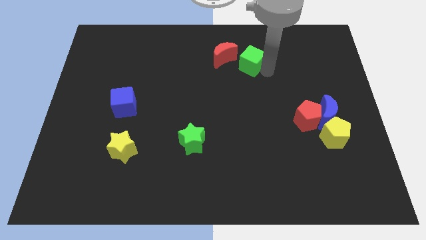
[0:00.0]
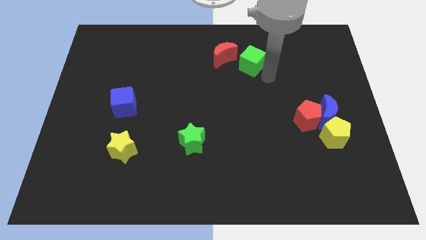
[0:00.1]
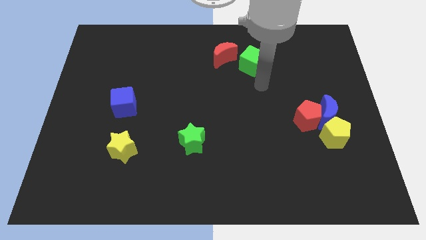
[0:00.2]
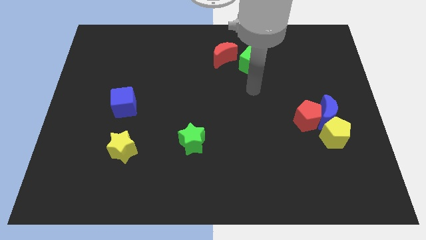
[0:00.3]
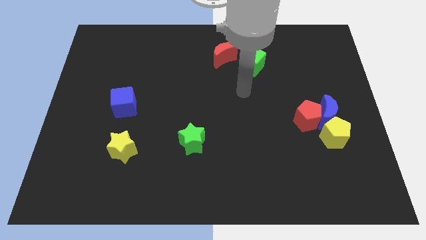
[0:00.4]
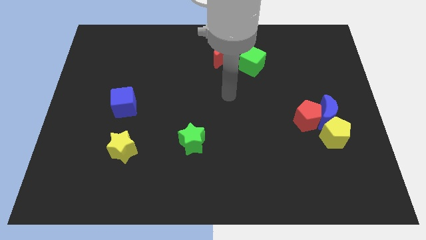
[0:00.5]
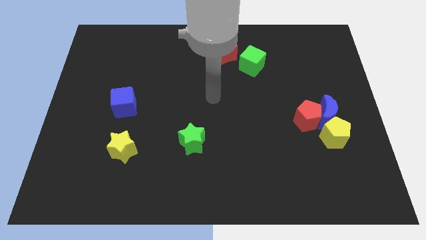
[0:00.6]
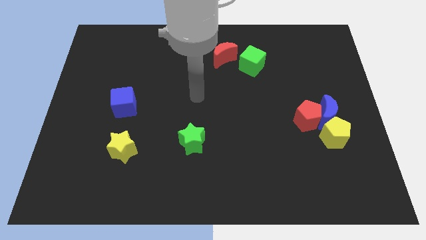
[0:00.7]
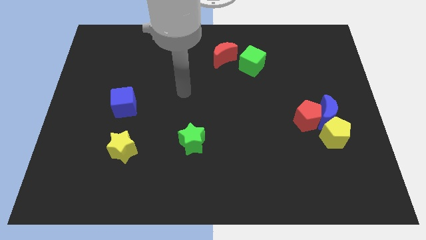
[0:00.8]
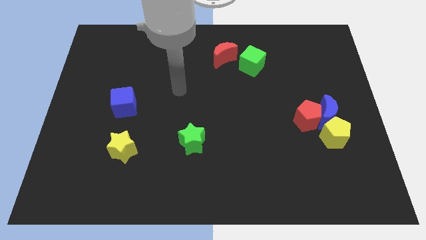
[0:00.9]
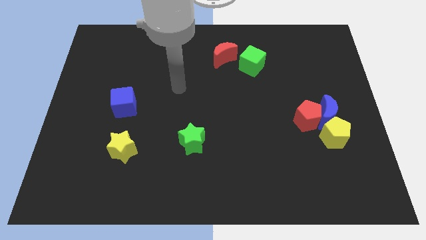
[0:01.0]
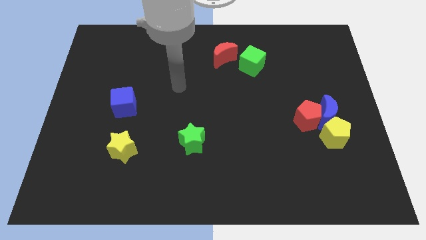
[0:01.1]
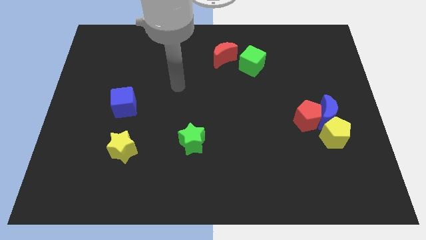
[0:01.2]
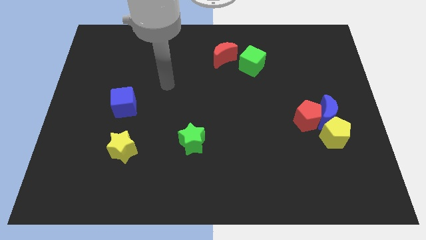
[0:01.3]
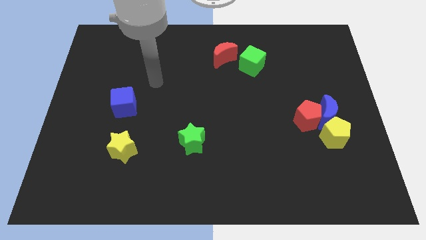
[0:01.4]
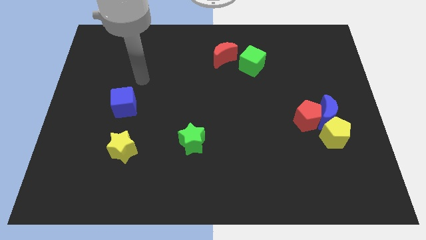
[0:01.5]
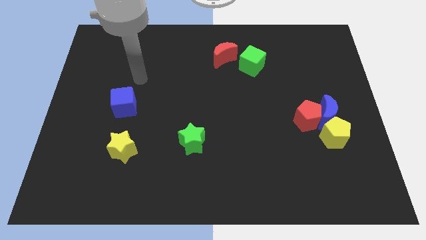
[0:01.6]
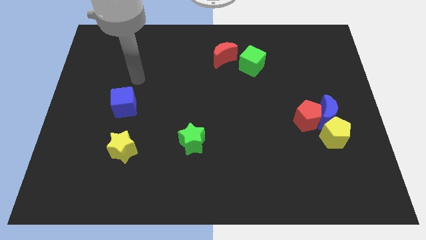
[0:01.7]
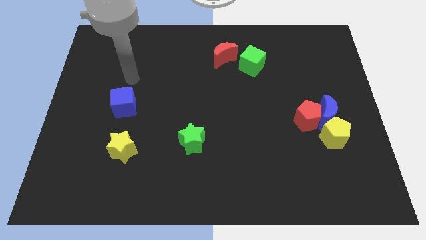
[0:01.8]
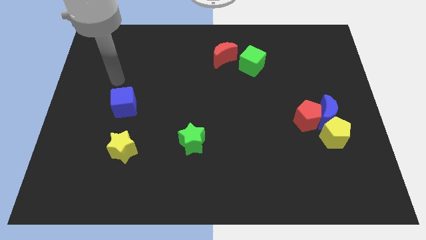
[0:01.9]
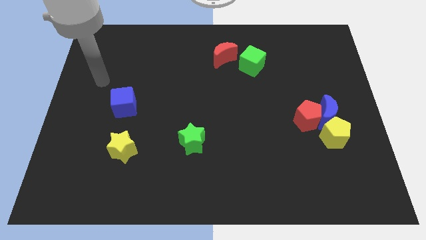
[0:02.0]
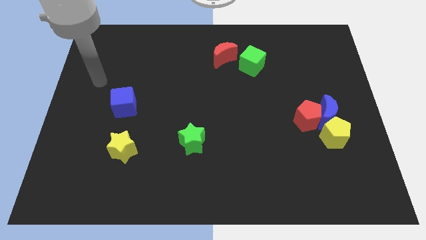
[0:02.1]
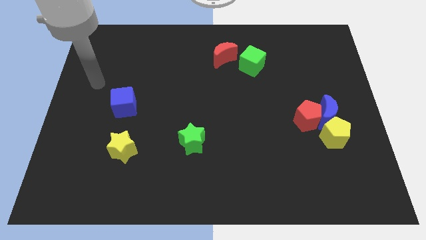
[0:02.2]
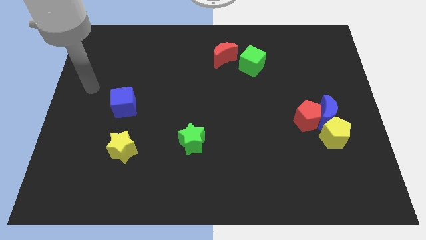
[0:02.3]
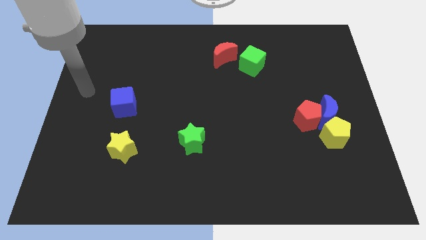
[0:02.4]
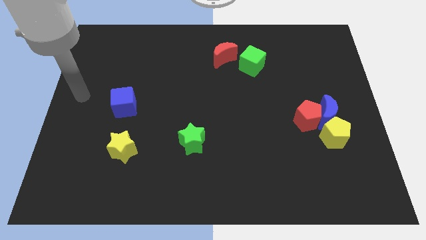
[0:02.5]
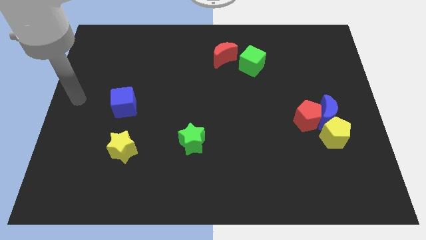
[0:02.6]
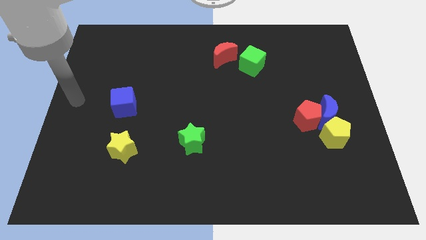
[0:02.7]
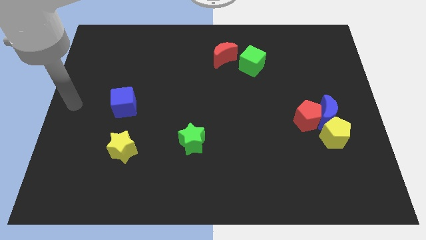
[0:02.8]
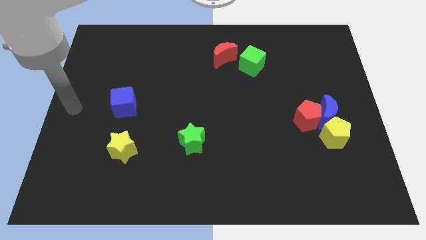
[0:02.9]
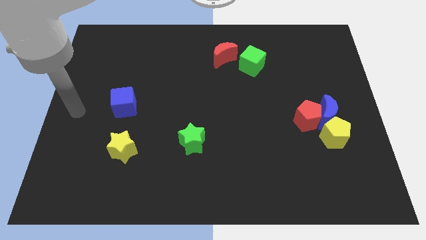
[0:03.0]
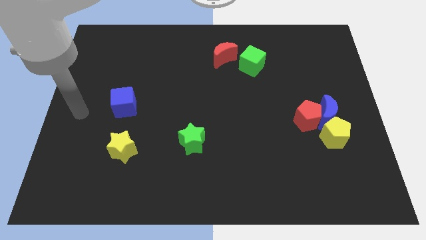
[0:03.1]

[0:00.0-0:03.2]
place the arm to the left of the blue cube

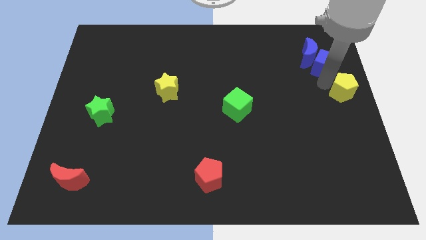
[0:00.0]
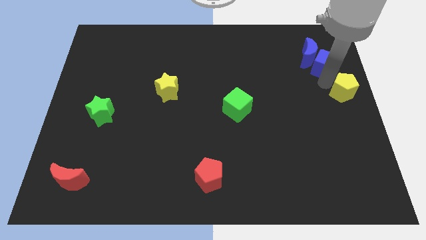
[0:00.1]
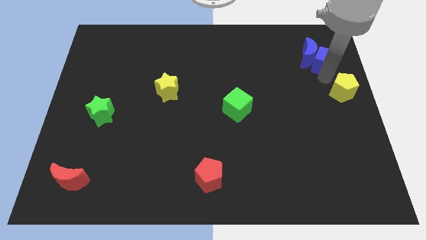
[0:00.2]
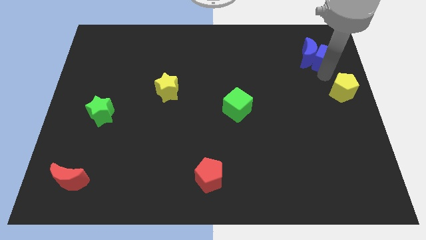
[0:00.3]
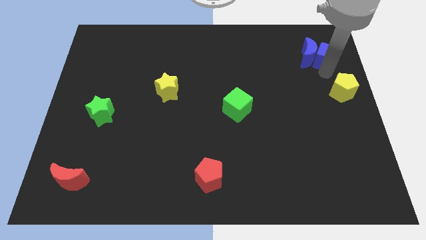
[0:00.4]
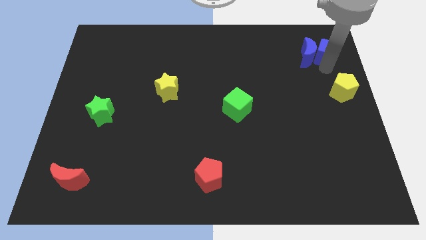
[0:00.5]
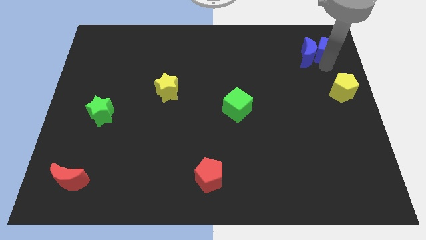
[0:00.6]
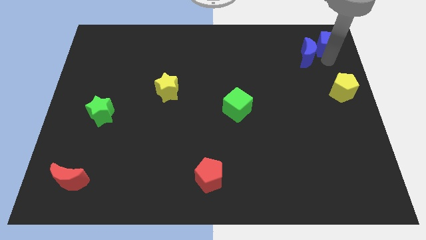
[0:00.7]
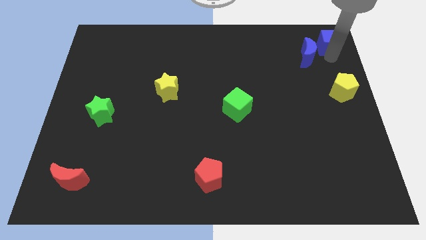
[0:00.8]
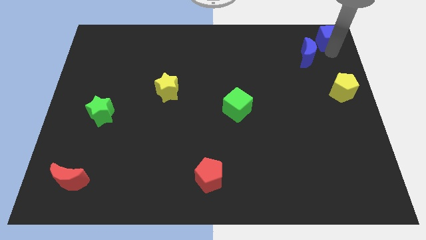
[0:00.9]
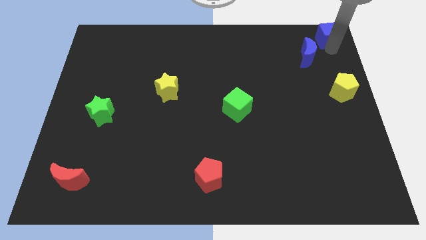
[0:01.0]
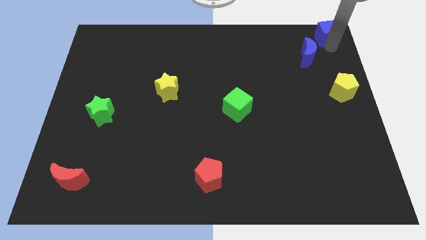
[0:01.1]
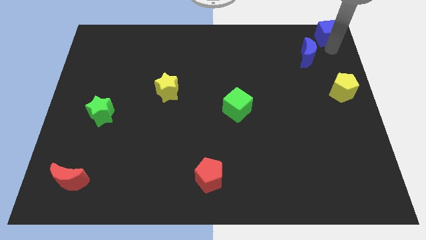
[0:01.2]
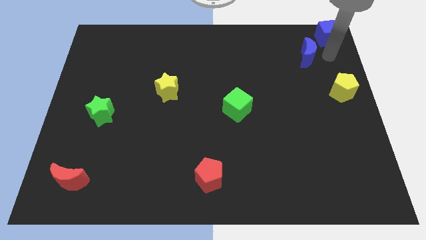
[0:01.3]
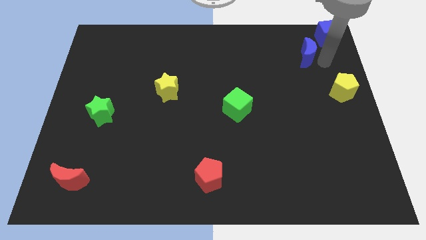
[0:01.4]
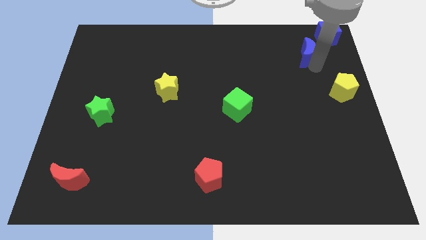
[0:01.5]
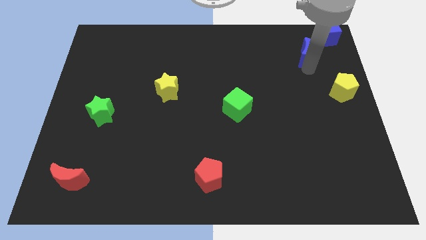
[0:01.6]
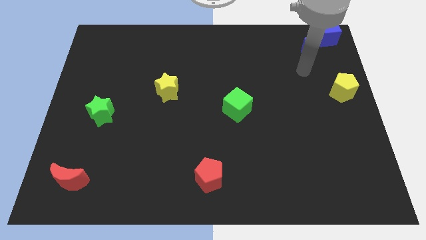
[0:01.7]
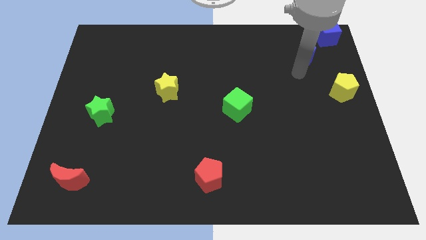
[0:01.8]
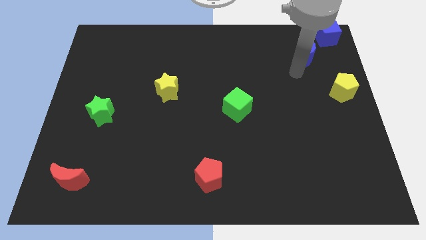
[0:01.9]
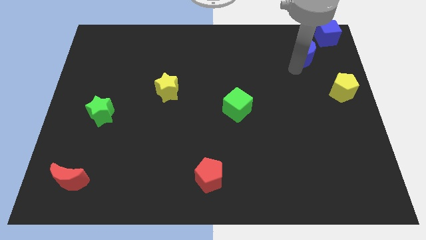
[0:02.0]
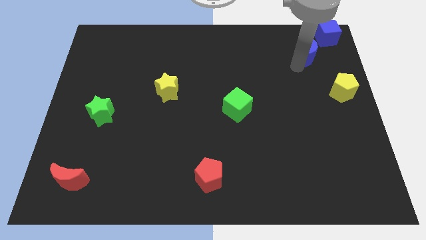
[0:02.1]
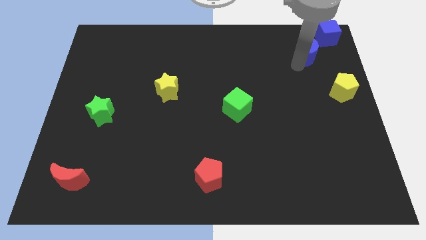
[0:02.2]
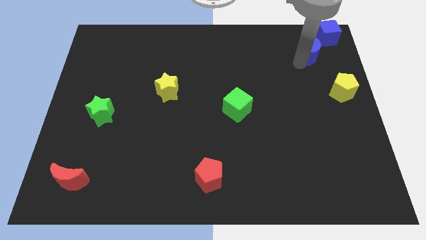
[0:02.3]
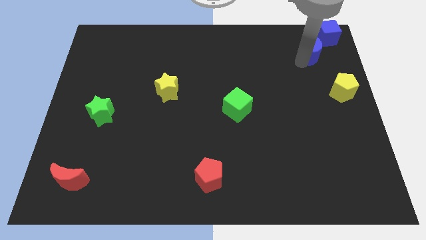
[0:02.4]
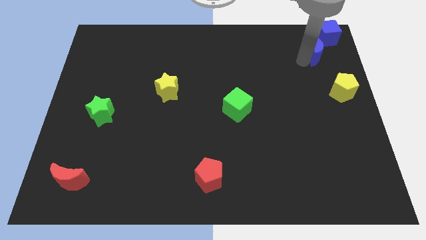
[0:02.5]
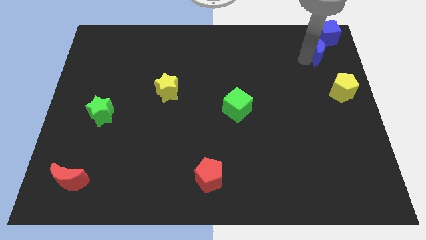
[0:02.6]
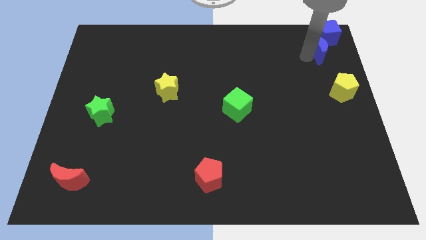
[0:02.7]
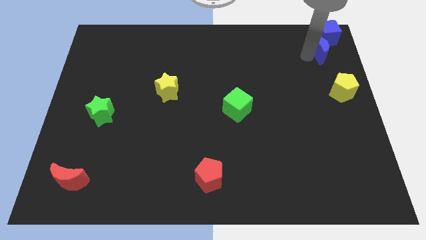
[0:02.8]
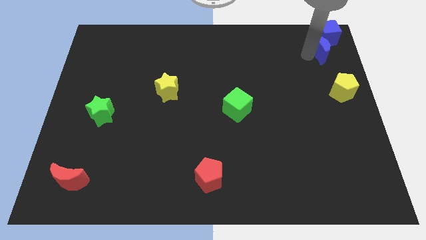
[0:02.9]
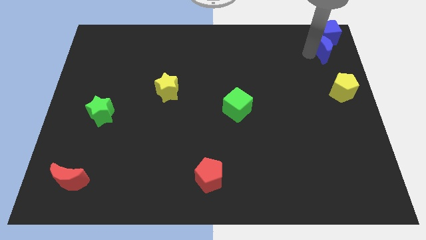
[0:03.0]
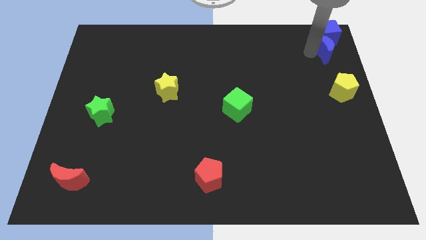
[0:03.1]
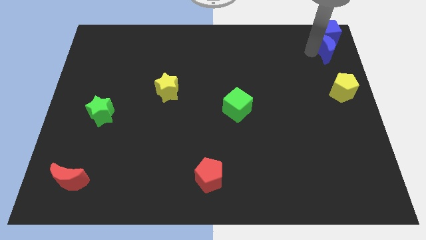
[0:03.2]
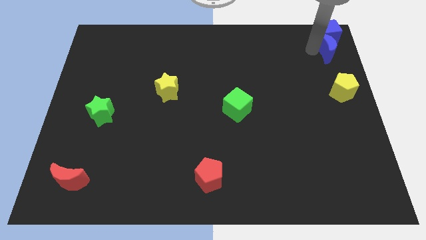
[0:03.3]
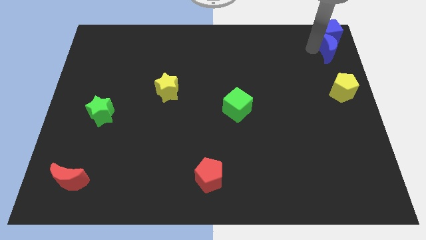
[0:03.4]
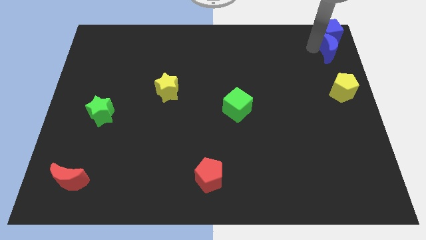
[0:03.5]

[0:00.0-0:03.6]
push the blue blocks towards the top right corner of the board

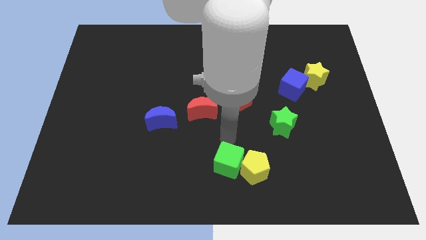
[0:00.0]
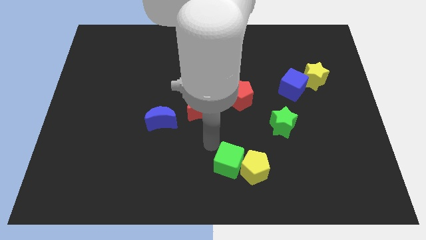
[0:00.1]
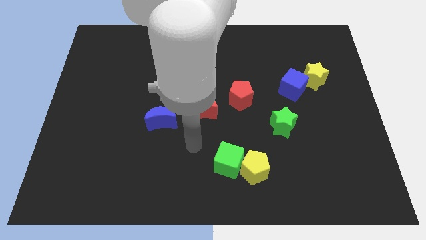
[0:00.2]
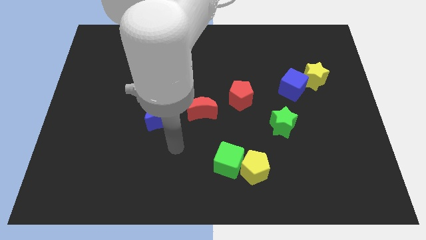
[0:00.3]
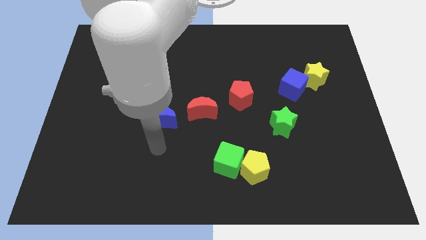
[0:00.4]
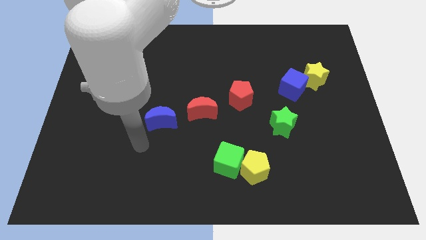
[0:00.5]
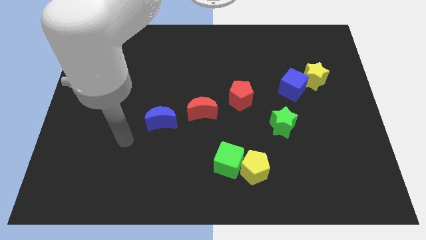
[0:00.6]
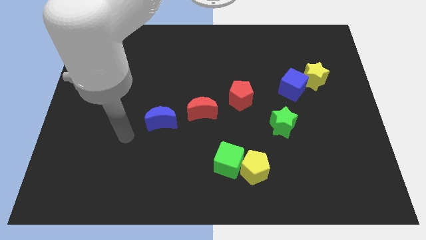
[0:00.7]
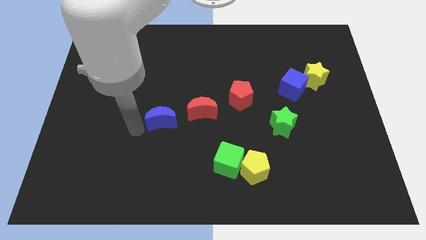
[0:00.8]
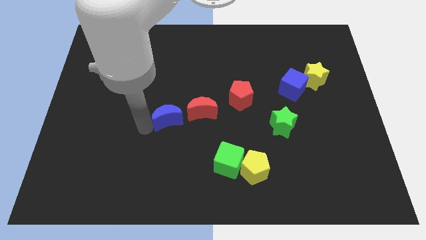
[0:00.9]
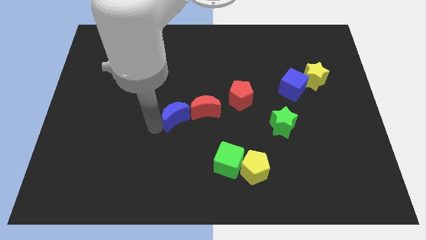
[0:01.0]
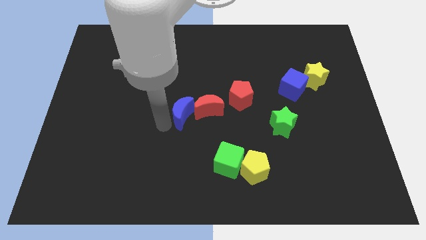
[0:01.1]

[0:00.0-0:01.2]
move the blue crescent slightly to the right

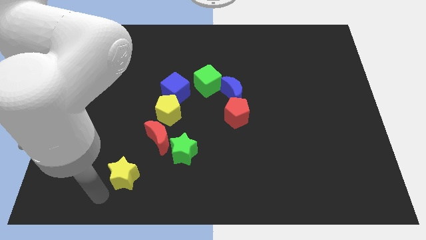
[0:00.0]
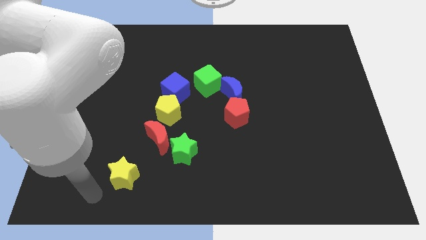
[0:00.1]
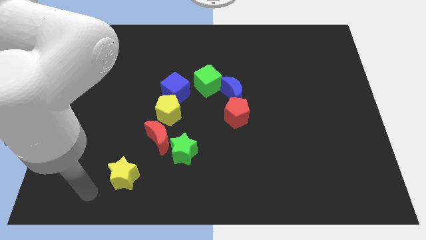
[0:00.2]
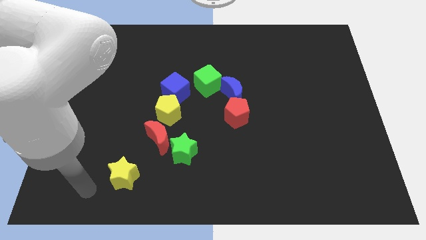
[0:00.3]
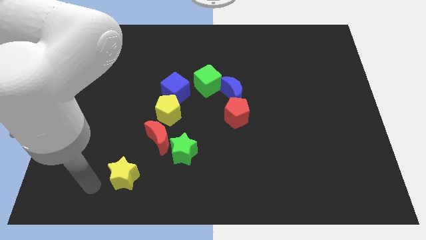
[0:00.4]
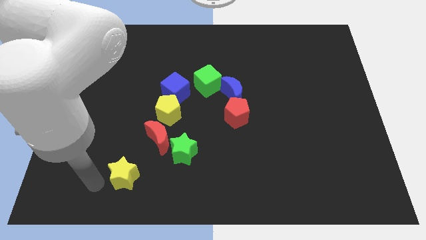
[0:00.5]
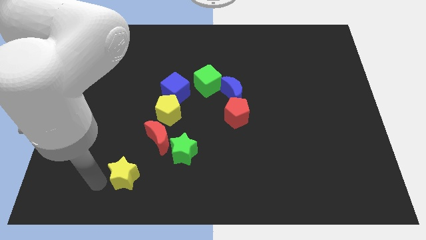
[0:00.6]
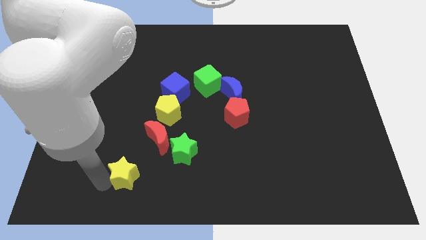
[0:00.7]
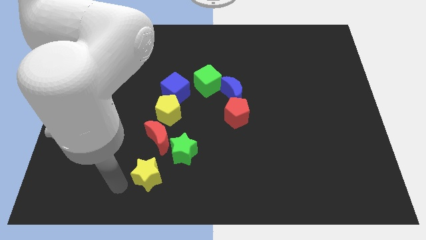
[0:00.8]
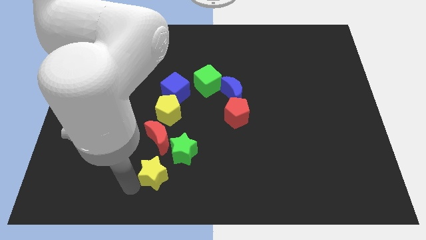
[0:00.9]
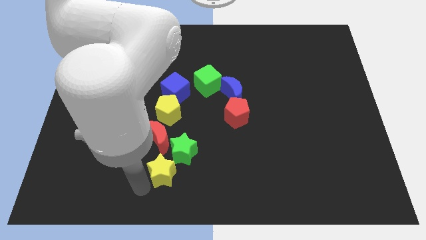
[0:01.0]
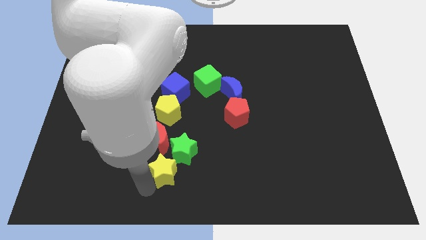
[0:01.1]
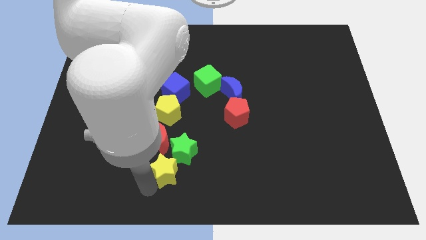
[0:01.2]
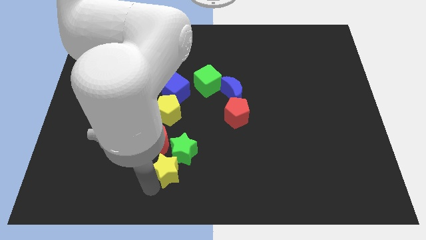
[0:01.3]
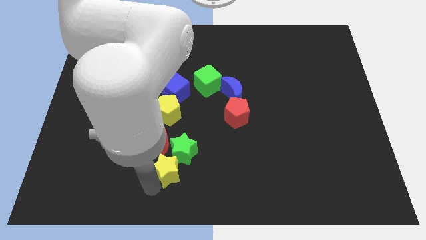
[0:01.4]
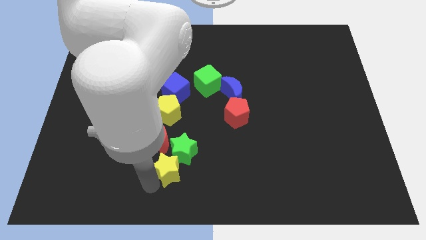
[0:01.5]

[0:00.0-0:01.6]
move the yellow star towards the bottom side of the green star
